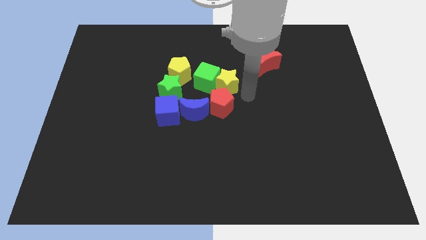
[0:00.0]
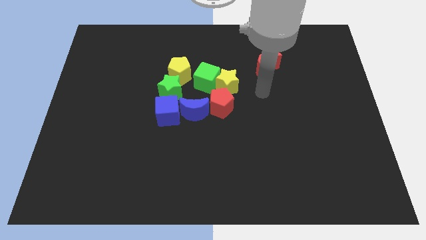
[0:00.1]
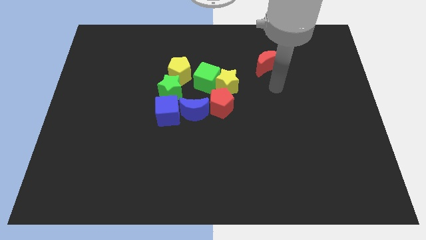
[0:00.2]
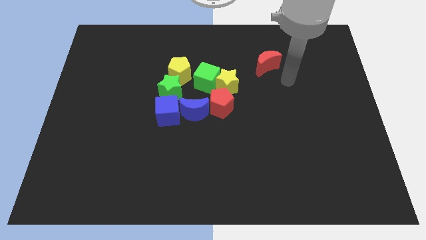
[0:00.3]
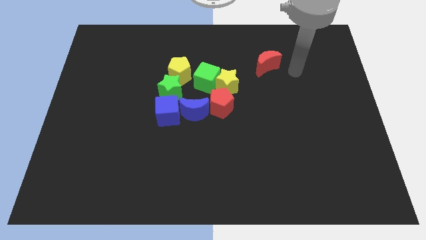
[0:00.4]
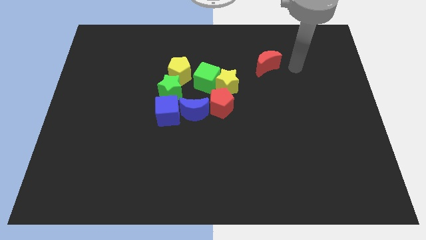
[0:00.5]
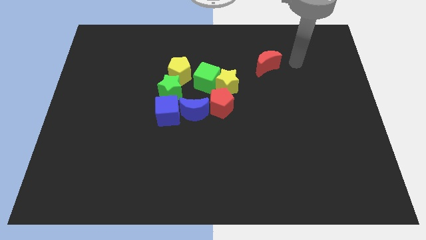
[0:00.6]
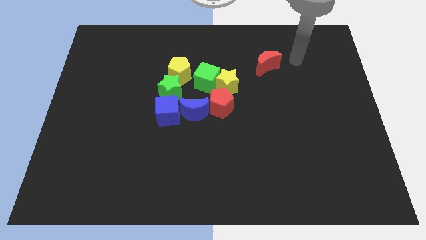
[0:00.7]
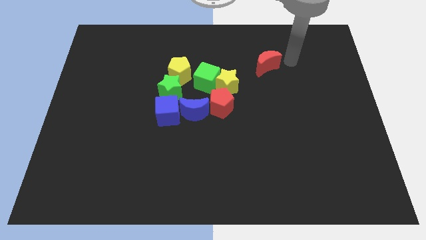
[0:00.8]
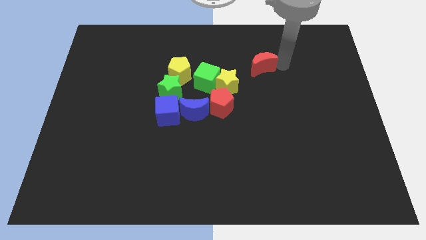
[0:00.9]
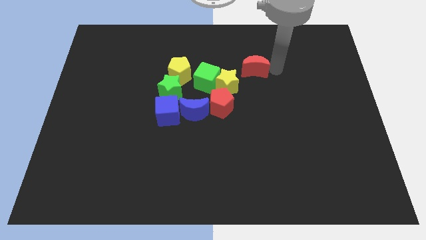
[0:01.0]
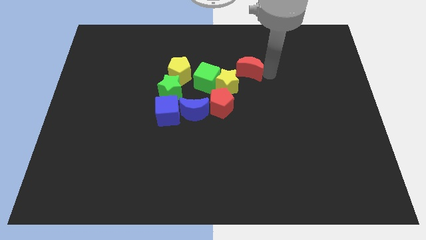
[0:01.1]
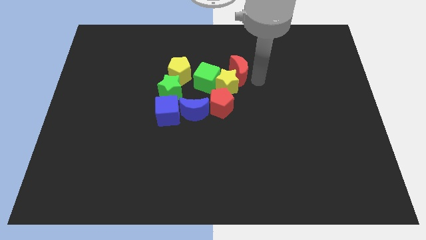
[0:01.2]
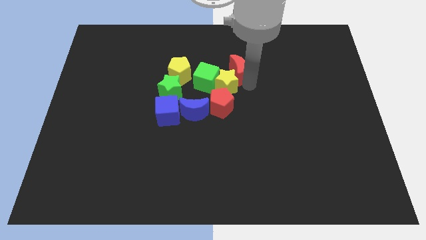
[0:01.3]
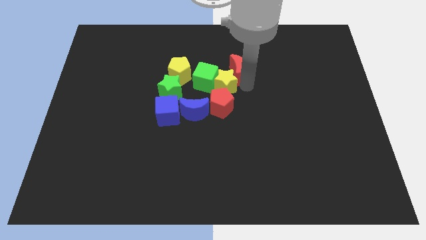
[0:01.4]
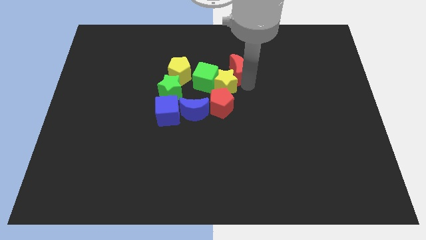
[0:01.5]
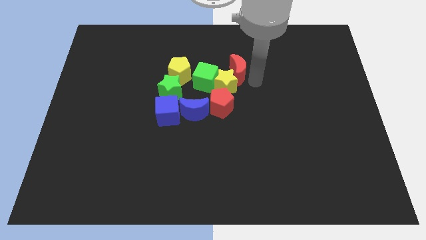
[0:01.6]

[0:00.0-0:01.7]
push the red crescent into yellow star

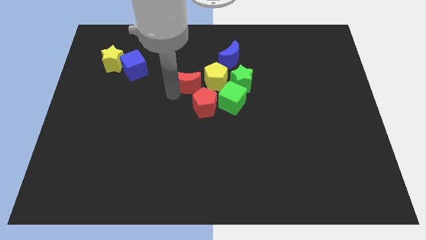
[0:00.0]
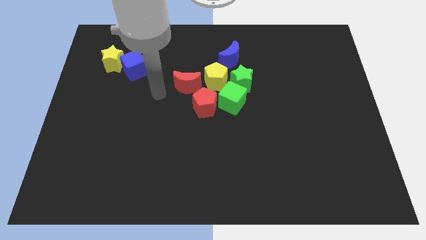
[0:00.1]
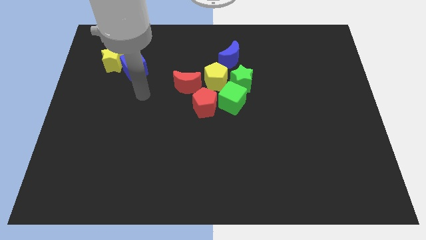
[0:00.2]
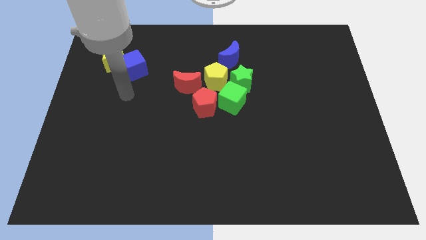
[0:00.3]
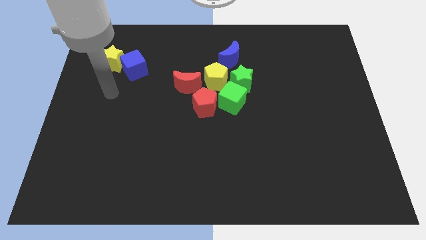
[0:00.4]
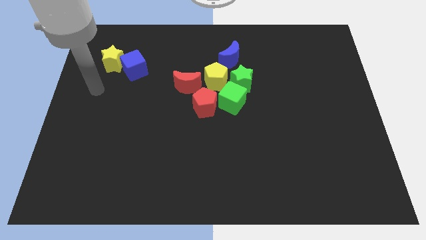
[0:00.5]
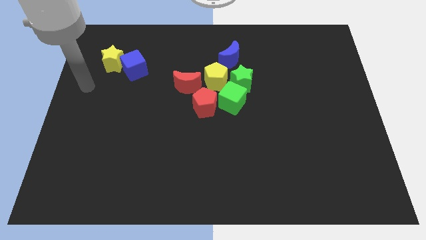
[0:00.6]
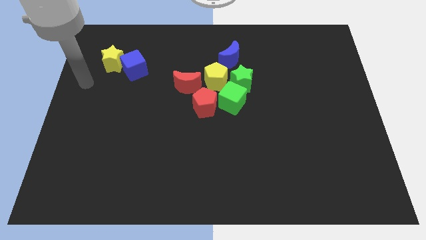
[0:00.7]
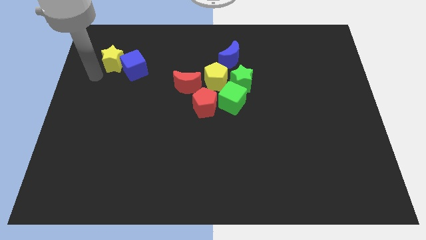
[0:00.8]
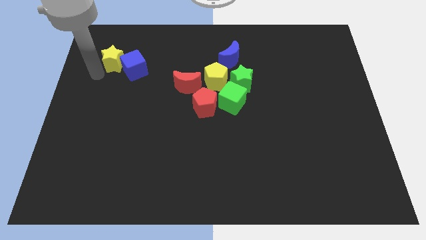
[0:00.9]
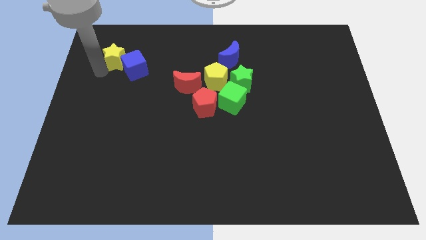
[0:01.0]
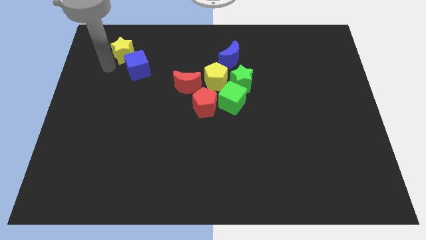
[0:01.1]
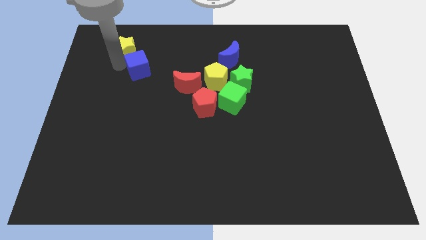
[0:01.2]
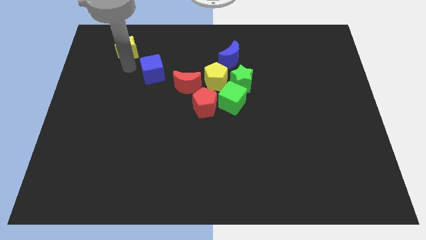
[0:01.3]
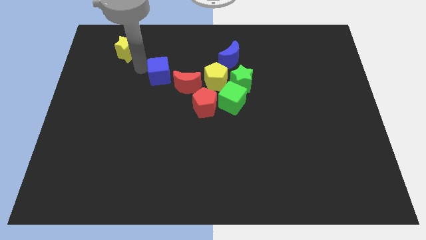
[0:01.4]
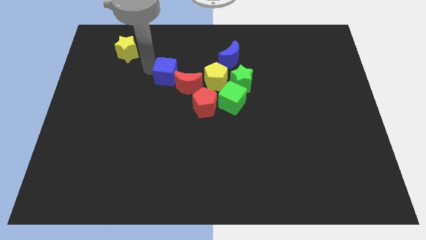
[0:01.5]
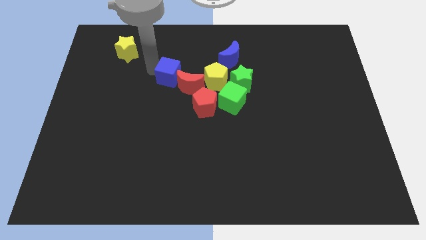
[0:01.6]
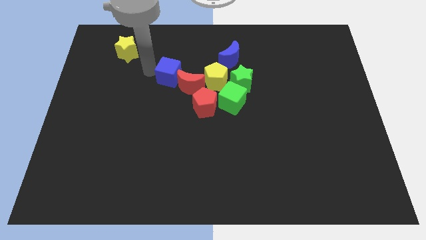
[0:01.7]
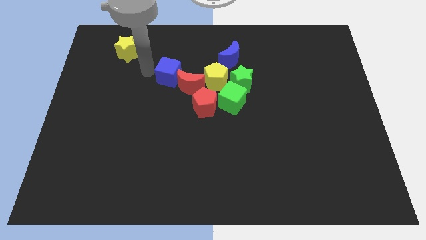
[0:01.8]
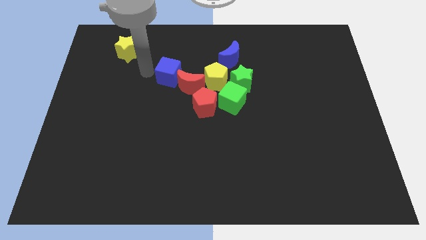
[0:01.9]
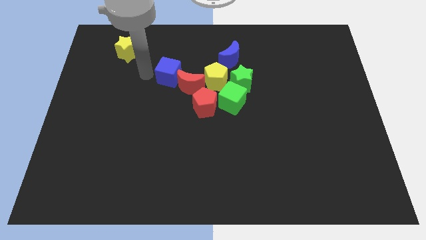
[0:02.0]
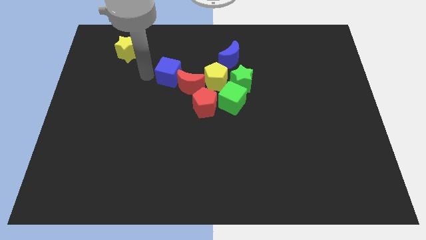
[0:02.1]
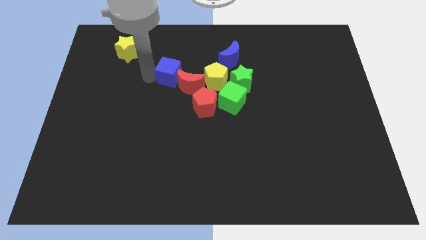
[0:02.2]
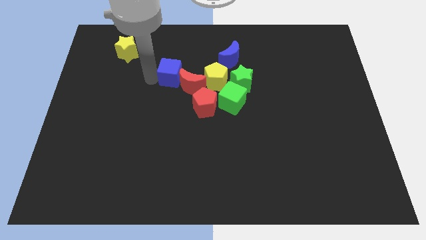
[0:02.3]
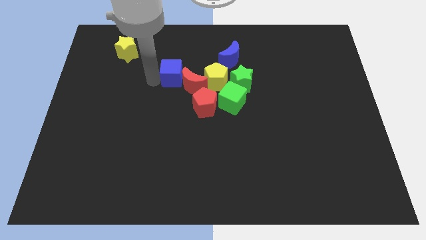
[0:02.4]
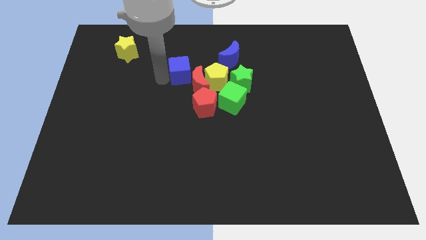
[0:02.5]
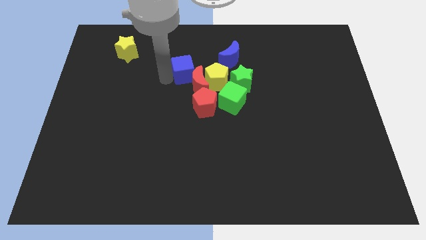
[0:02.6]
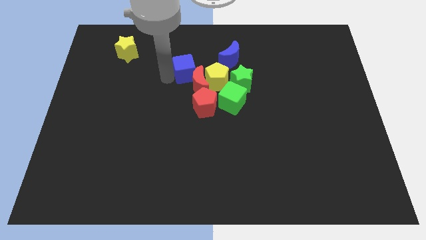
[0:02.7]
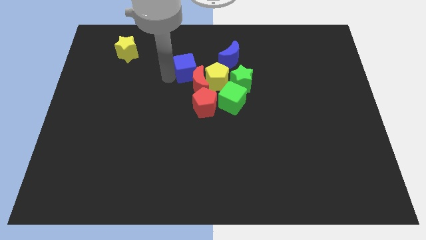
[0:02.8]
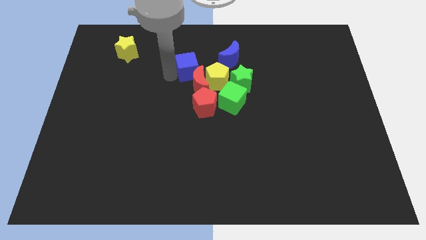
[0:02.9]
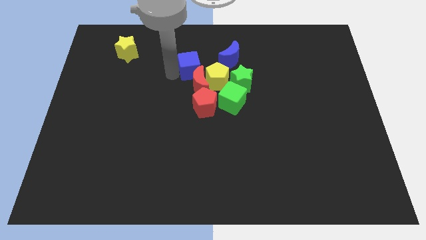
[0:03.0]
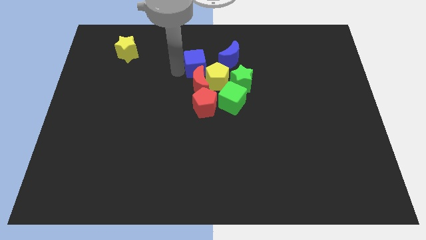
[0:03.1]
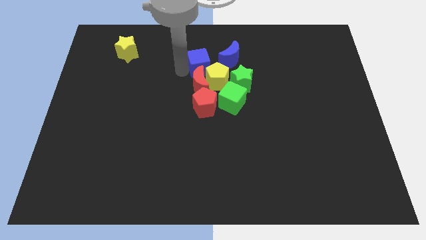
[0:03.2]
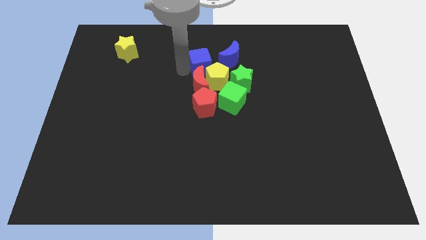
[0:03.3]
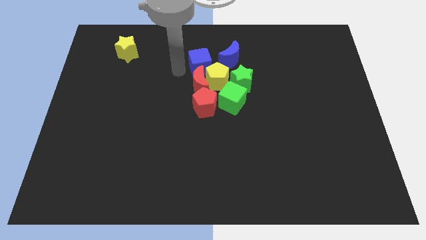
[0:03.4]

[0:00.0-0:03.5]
bring the blue cube at the top side of the red moon

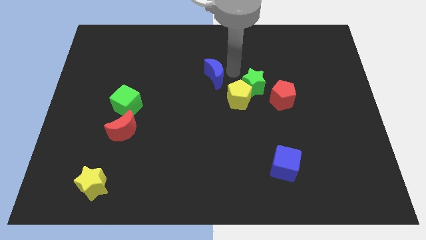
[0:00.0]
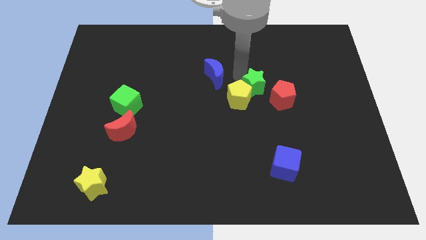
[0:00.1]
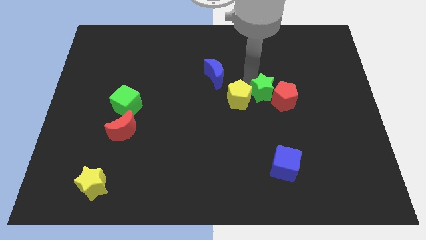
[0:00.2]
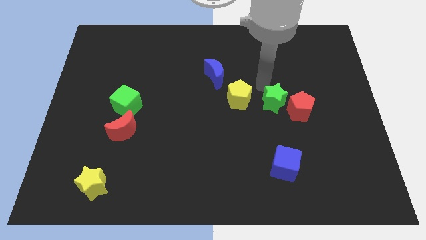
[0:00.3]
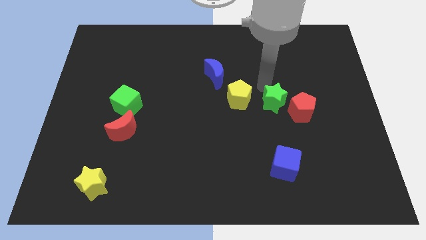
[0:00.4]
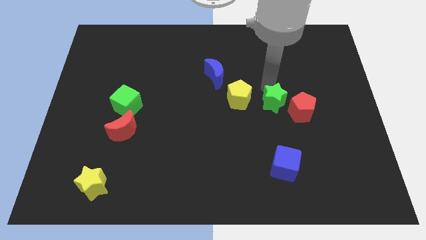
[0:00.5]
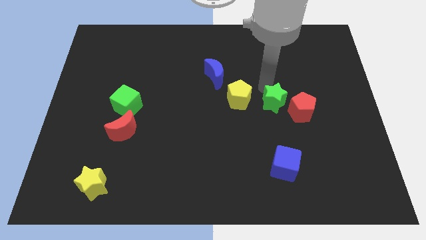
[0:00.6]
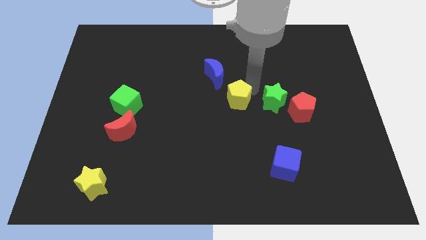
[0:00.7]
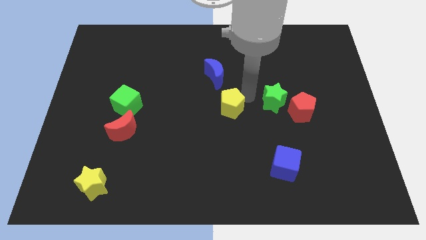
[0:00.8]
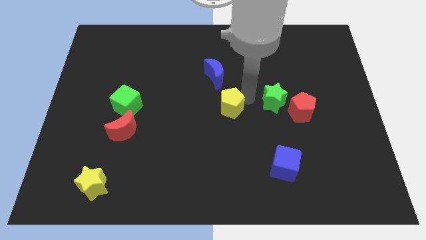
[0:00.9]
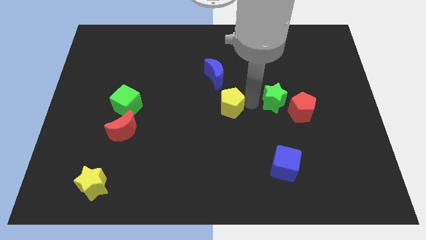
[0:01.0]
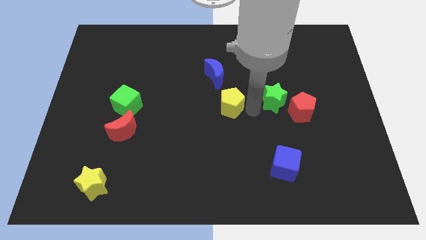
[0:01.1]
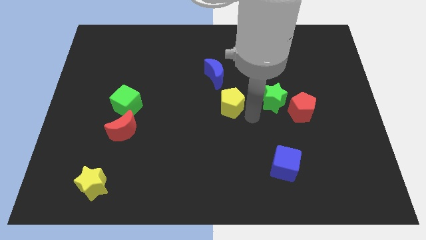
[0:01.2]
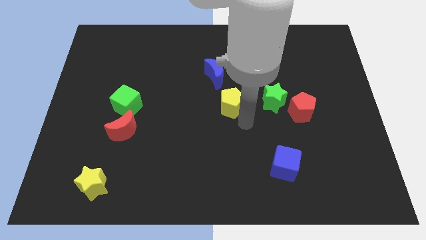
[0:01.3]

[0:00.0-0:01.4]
move the green star into the red pentagon

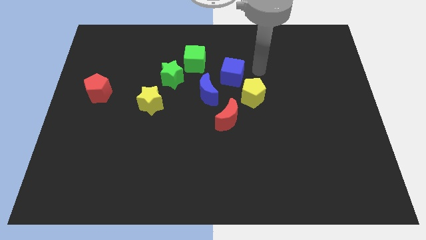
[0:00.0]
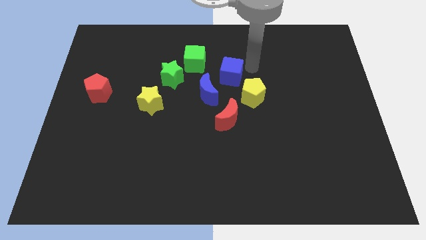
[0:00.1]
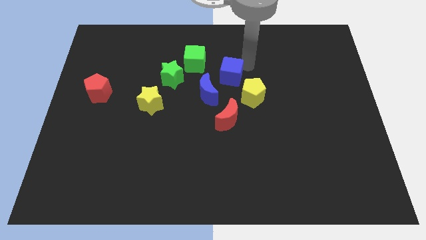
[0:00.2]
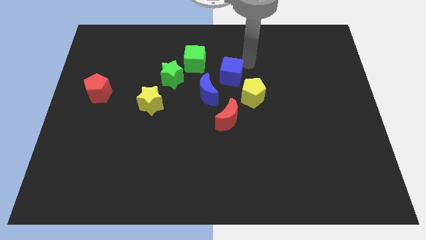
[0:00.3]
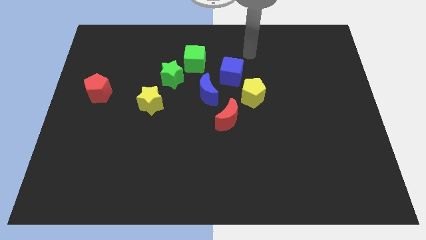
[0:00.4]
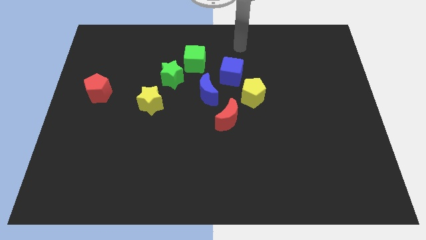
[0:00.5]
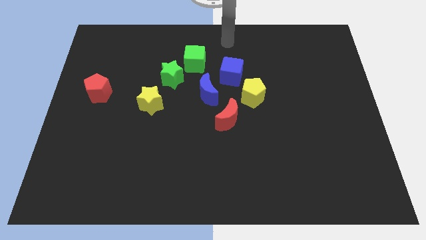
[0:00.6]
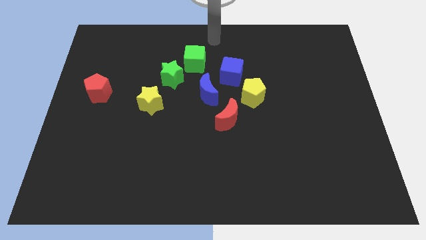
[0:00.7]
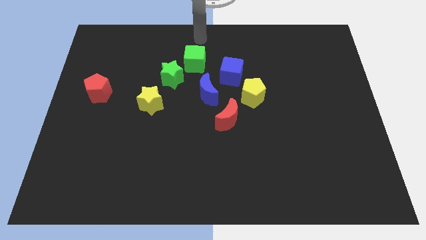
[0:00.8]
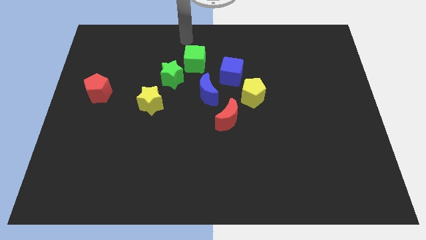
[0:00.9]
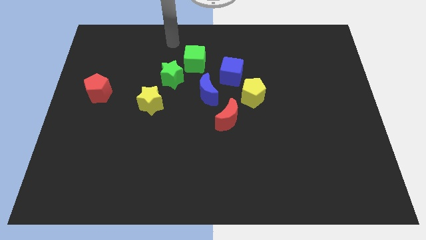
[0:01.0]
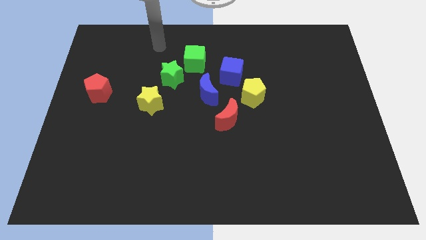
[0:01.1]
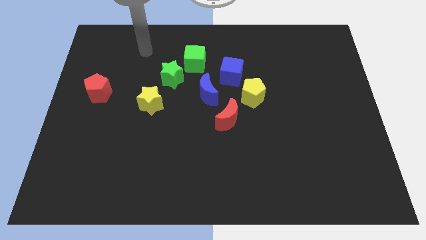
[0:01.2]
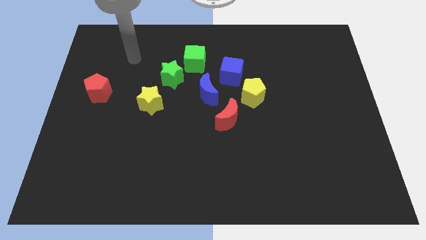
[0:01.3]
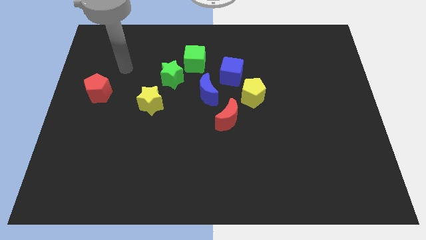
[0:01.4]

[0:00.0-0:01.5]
move the arm away from the blue cube

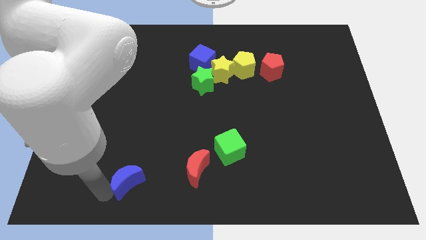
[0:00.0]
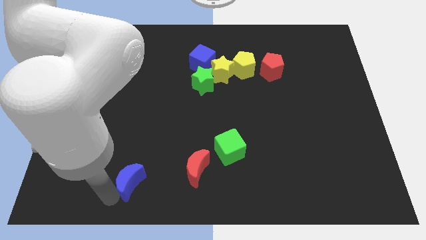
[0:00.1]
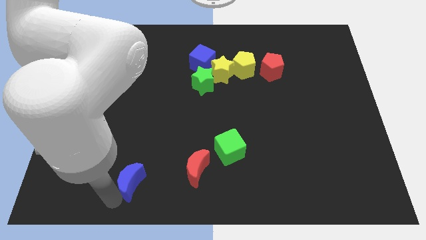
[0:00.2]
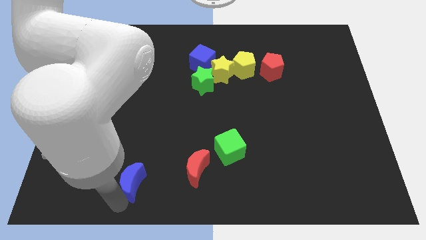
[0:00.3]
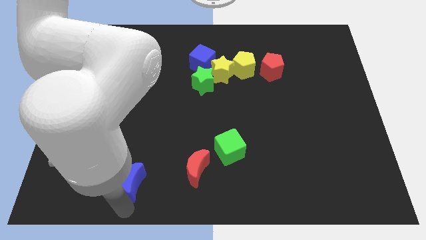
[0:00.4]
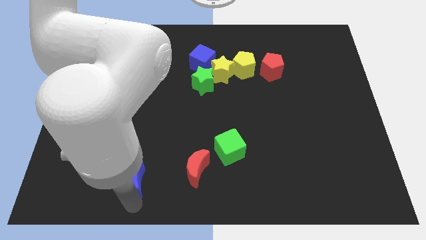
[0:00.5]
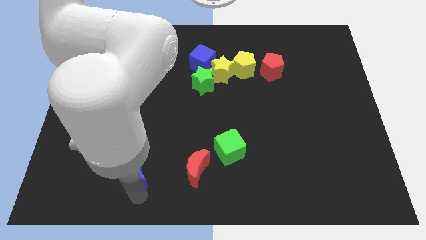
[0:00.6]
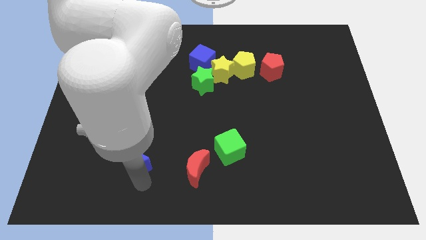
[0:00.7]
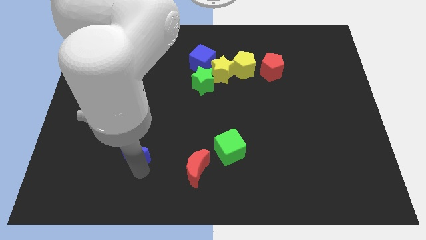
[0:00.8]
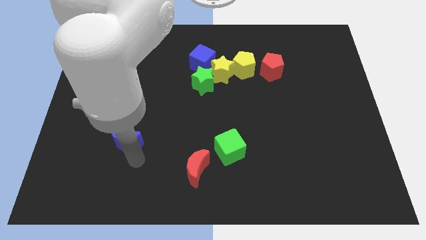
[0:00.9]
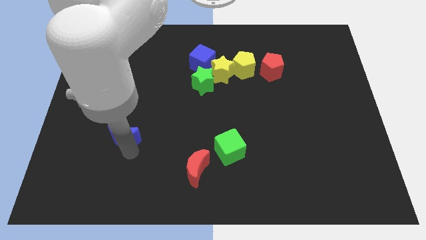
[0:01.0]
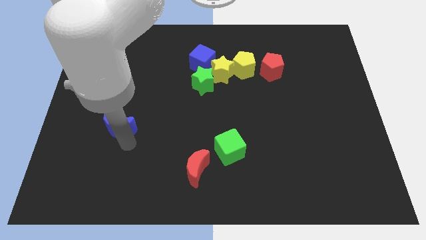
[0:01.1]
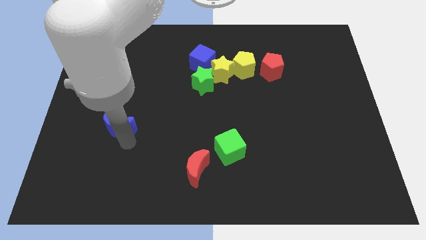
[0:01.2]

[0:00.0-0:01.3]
push the blue crescent at the bottom left of the green star
